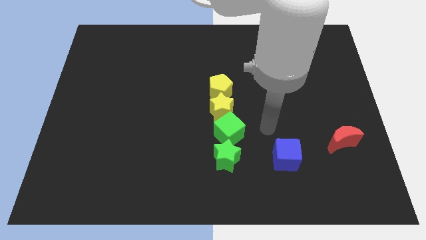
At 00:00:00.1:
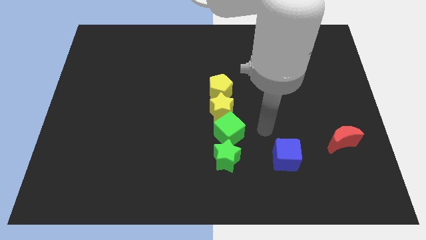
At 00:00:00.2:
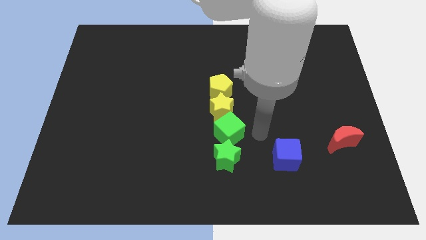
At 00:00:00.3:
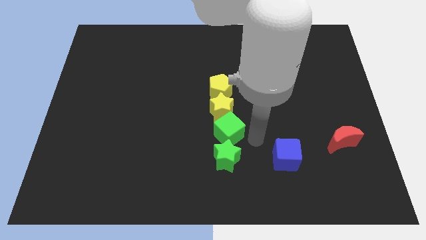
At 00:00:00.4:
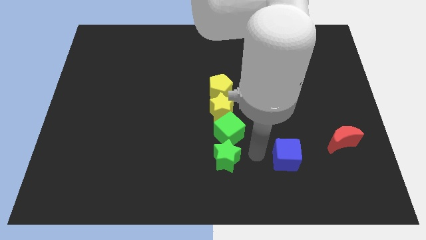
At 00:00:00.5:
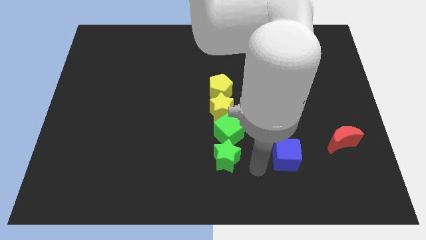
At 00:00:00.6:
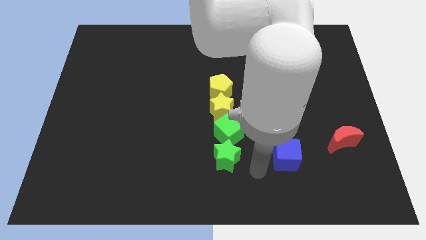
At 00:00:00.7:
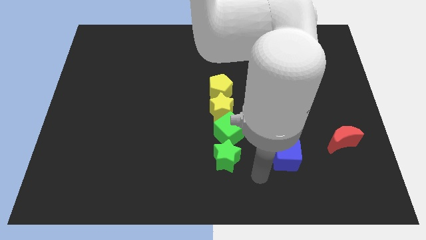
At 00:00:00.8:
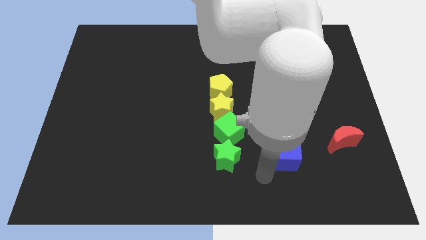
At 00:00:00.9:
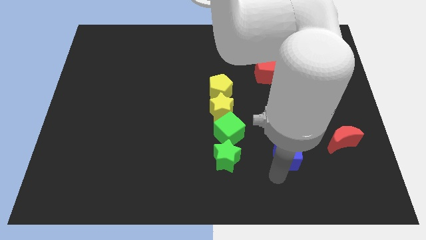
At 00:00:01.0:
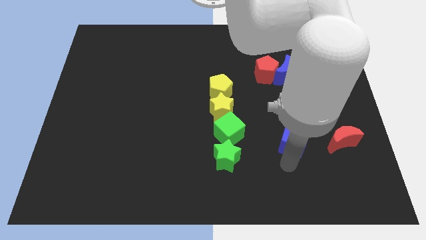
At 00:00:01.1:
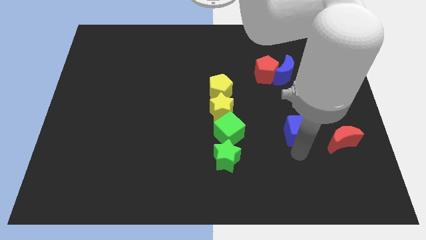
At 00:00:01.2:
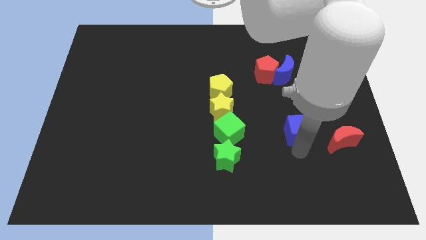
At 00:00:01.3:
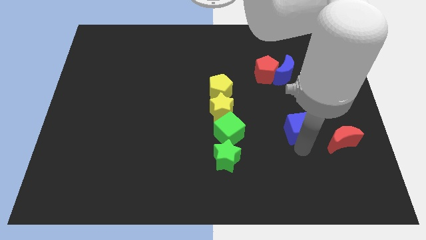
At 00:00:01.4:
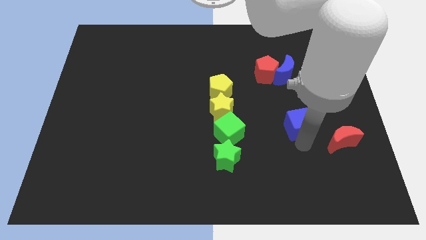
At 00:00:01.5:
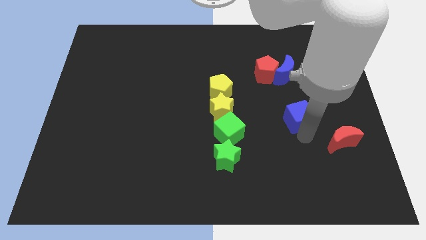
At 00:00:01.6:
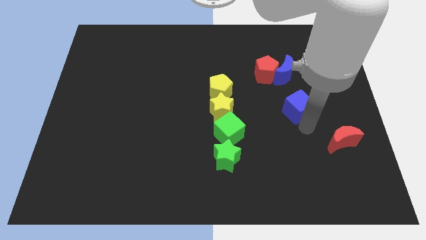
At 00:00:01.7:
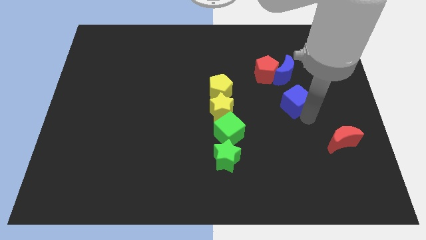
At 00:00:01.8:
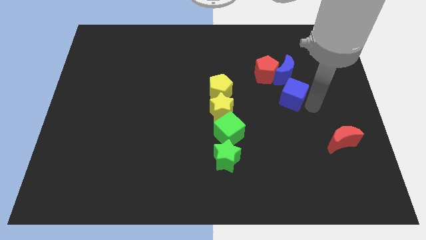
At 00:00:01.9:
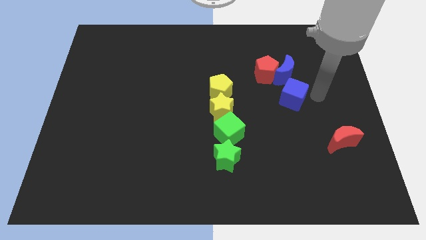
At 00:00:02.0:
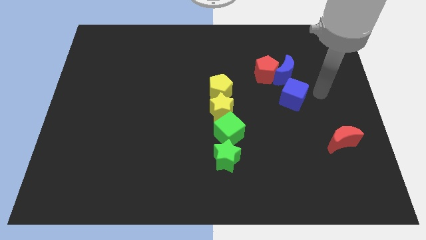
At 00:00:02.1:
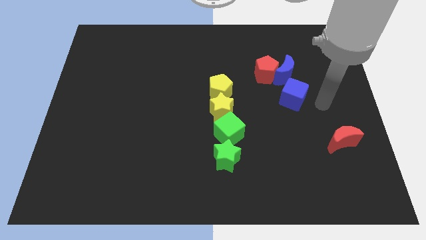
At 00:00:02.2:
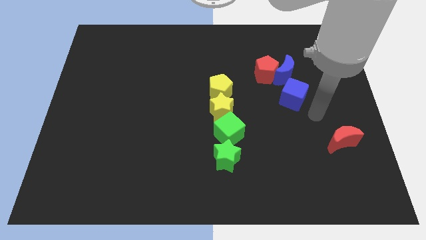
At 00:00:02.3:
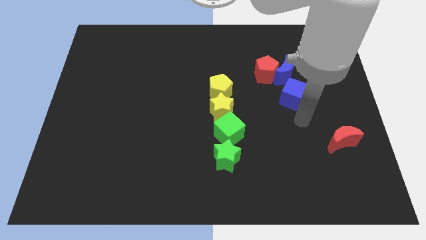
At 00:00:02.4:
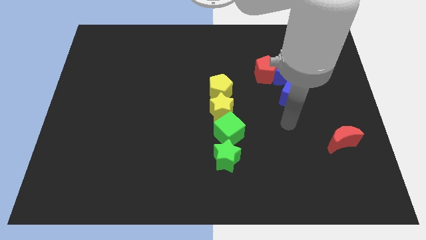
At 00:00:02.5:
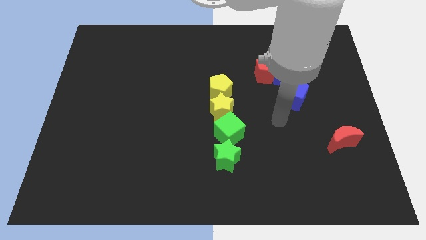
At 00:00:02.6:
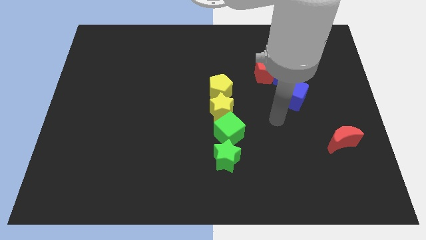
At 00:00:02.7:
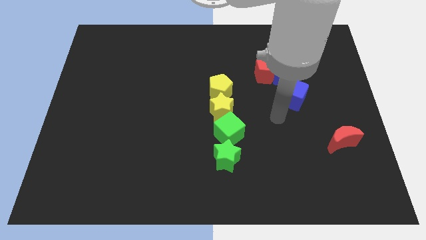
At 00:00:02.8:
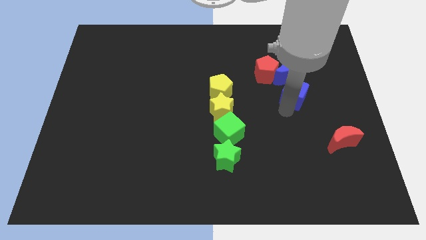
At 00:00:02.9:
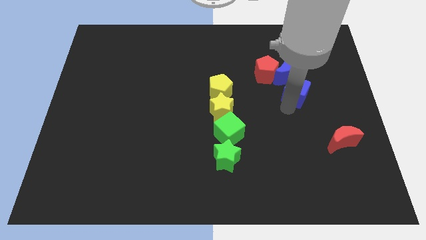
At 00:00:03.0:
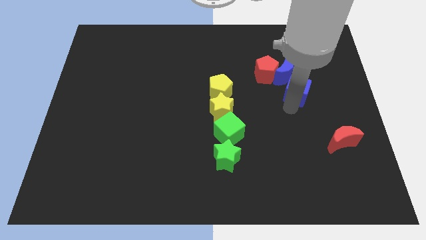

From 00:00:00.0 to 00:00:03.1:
push the blue cube to the bottom side of the blue crescent

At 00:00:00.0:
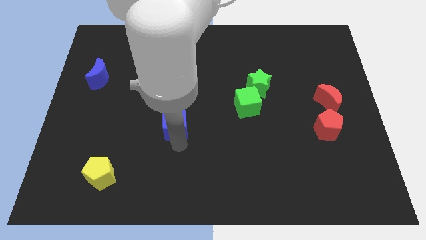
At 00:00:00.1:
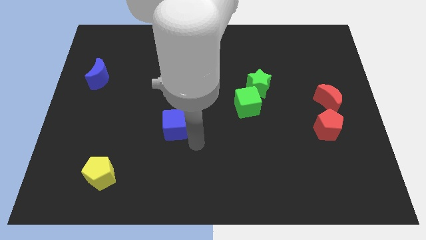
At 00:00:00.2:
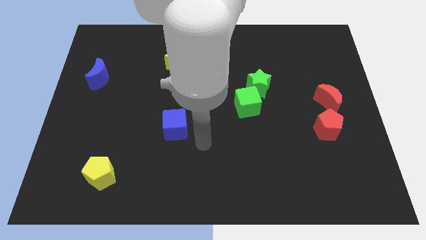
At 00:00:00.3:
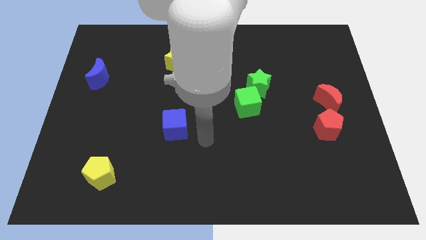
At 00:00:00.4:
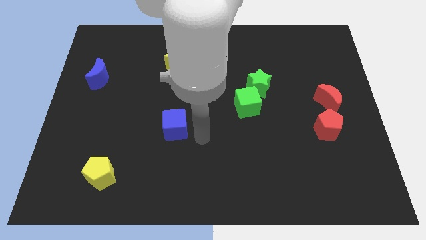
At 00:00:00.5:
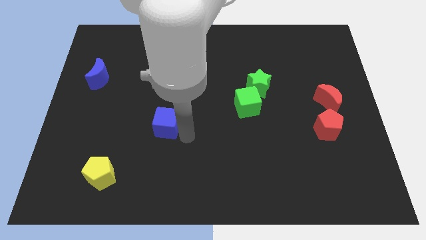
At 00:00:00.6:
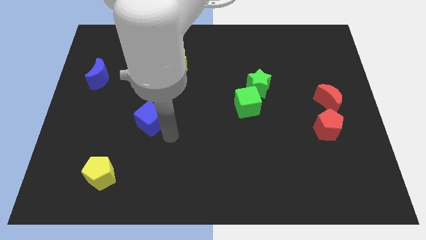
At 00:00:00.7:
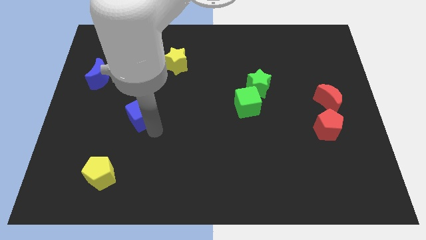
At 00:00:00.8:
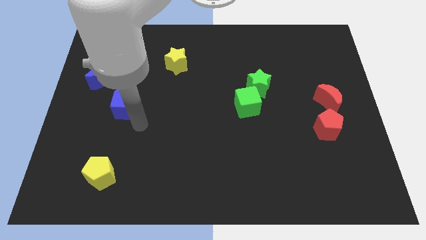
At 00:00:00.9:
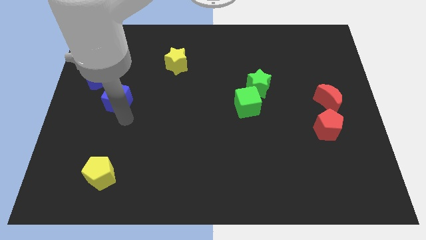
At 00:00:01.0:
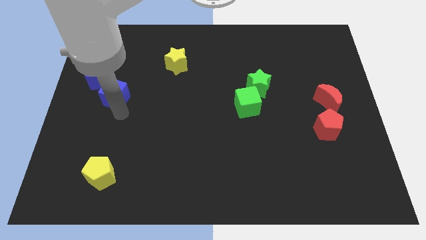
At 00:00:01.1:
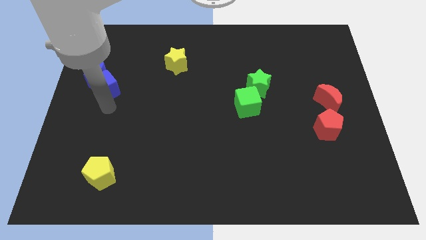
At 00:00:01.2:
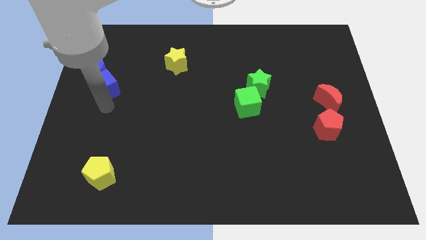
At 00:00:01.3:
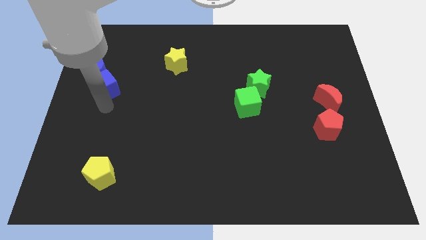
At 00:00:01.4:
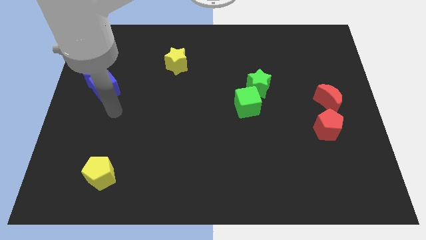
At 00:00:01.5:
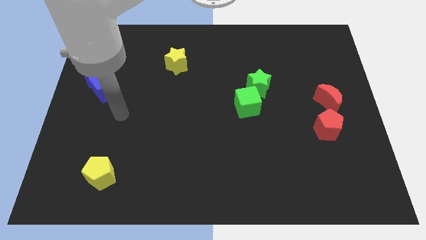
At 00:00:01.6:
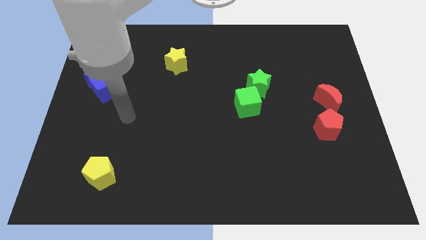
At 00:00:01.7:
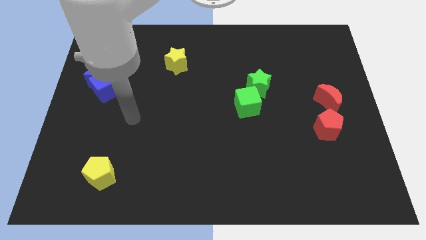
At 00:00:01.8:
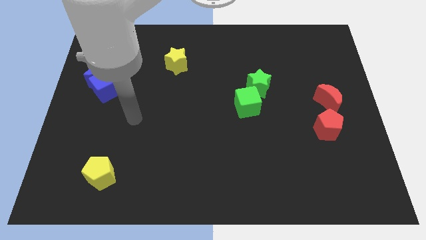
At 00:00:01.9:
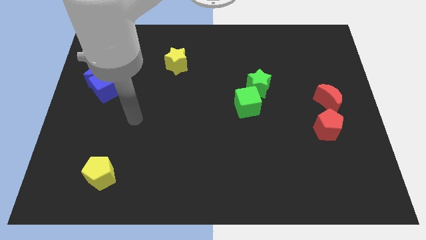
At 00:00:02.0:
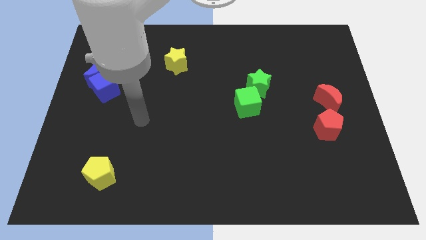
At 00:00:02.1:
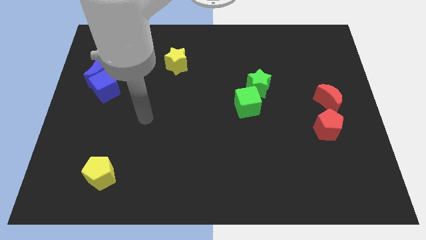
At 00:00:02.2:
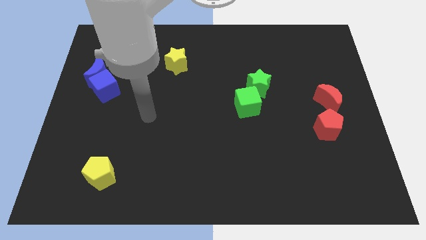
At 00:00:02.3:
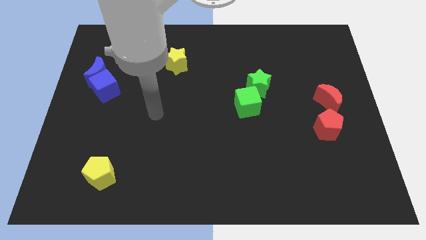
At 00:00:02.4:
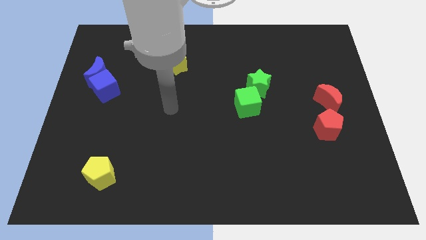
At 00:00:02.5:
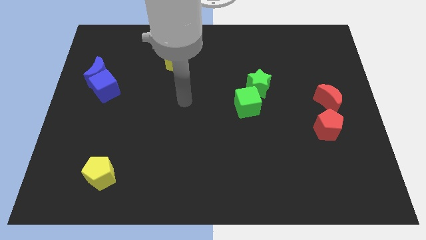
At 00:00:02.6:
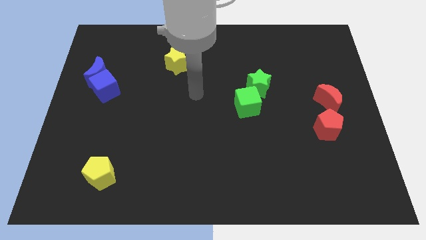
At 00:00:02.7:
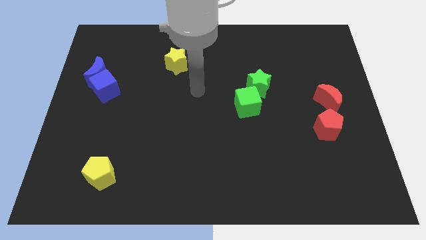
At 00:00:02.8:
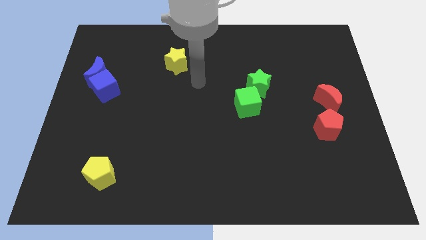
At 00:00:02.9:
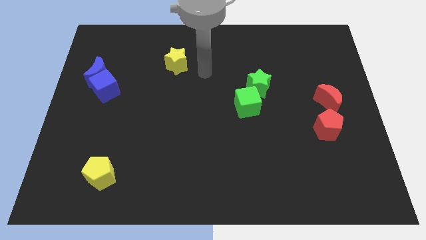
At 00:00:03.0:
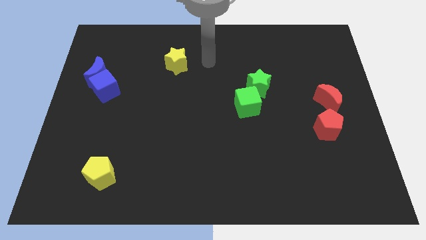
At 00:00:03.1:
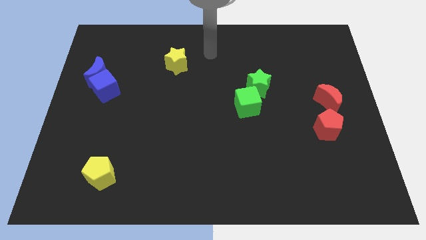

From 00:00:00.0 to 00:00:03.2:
push the blue cube into the blue moon

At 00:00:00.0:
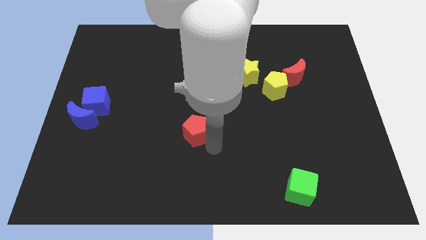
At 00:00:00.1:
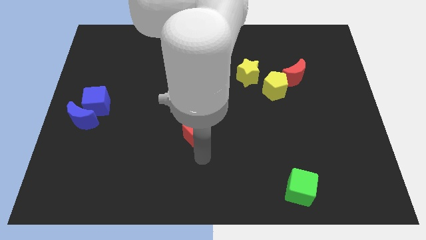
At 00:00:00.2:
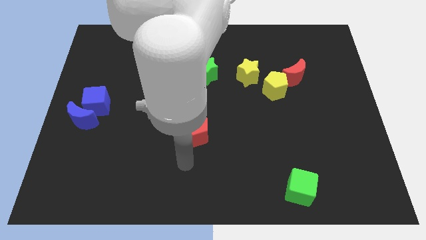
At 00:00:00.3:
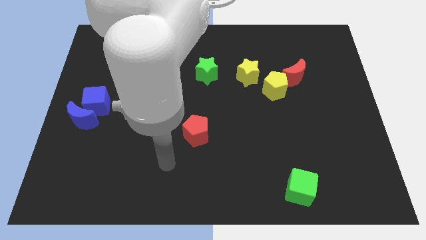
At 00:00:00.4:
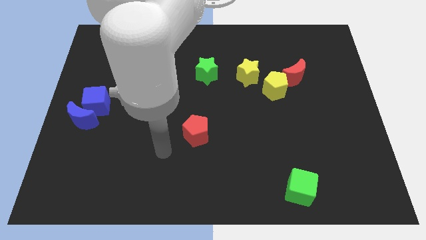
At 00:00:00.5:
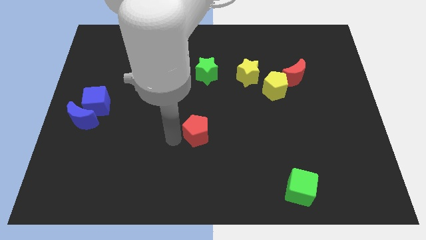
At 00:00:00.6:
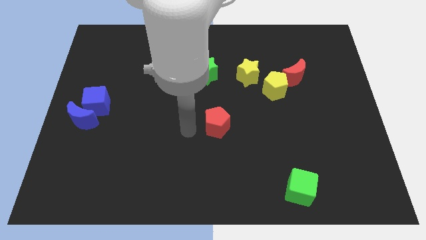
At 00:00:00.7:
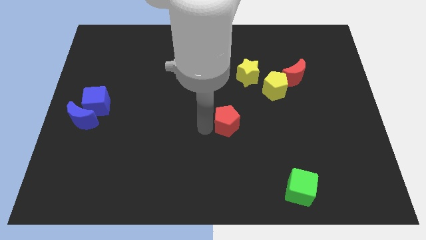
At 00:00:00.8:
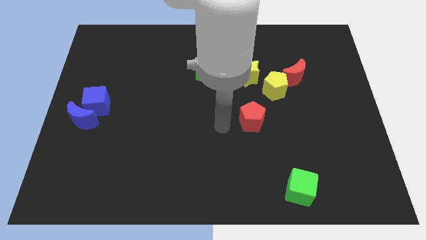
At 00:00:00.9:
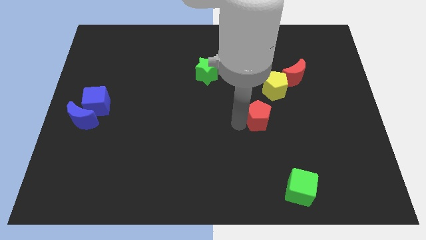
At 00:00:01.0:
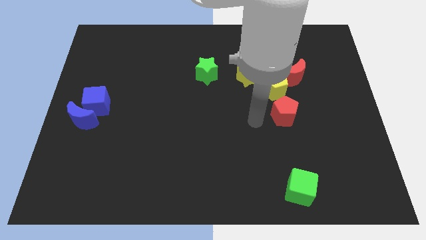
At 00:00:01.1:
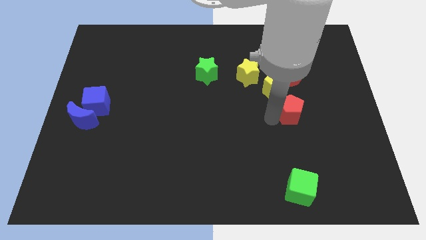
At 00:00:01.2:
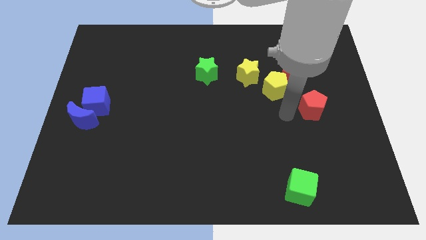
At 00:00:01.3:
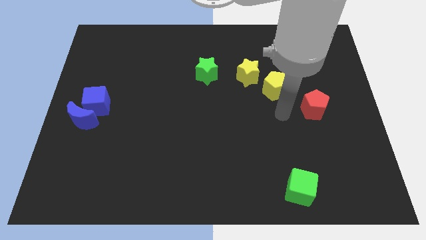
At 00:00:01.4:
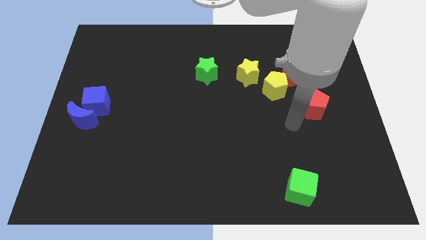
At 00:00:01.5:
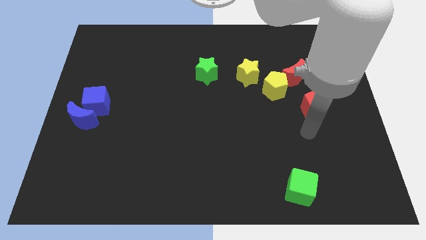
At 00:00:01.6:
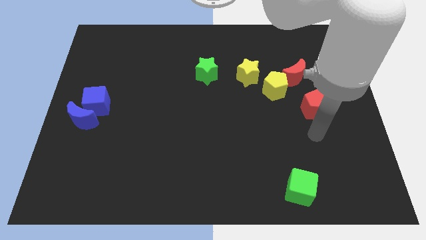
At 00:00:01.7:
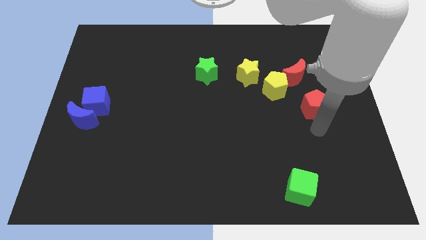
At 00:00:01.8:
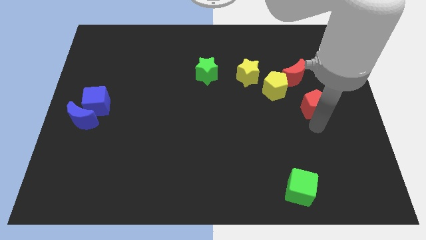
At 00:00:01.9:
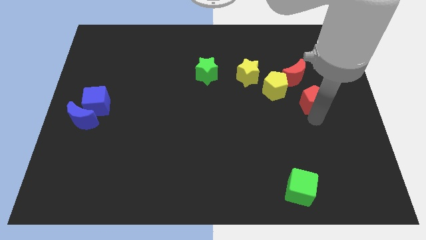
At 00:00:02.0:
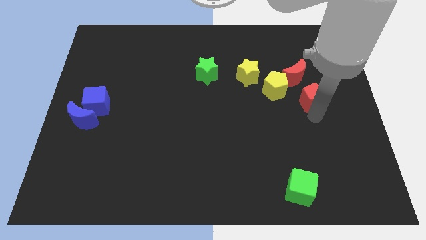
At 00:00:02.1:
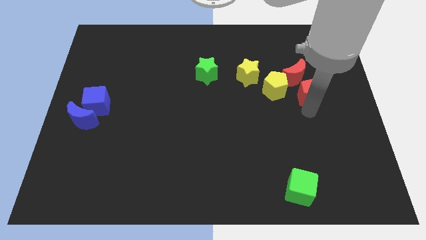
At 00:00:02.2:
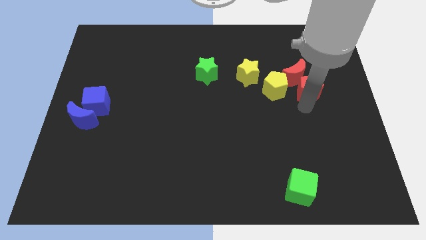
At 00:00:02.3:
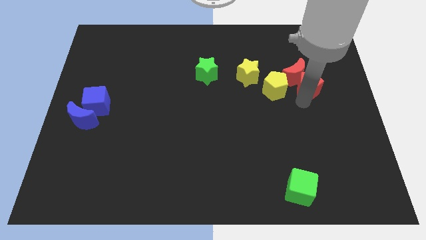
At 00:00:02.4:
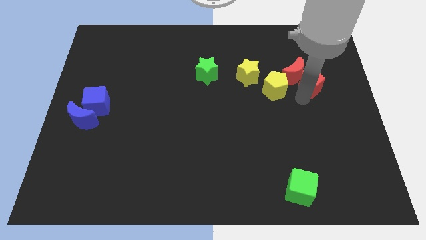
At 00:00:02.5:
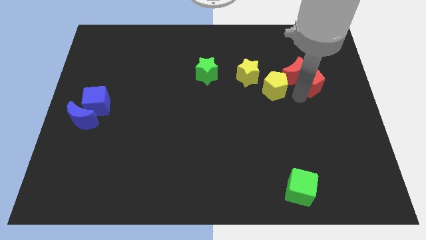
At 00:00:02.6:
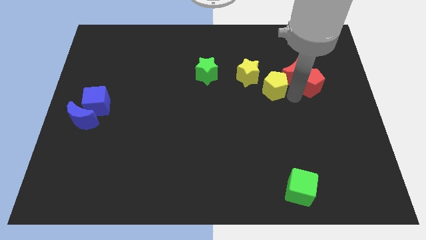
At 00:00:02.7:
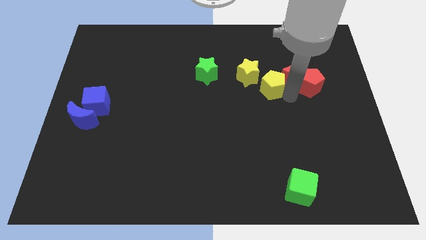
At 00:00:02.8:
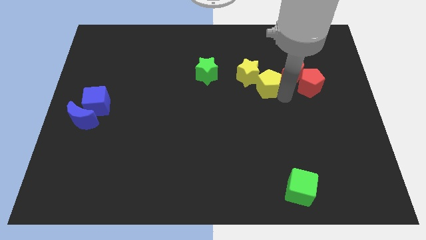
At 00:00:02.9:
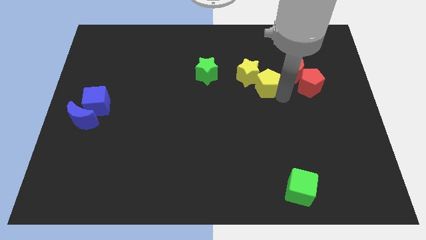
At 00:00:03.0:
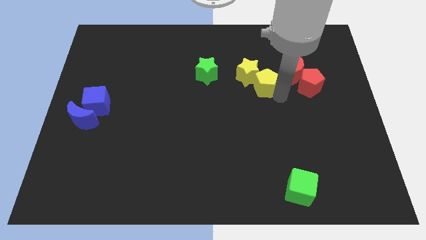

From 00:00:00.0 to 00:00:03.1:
move the red pentagon into the red crescent
